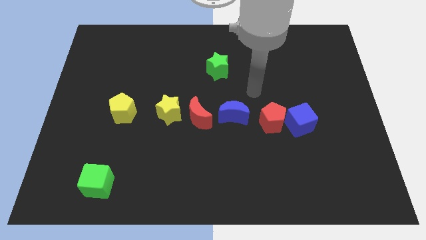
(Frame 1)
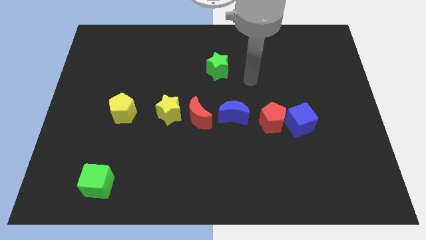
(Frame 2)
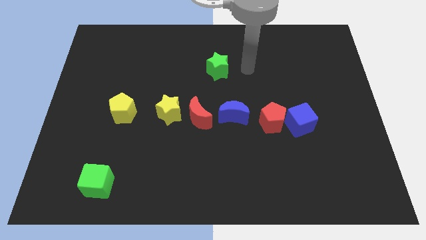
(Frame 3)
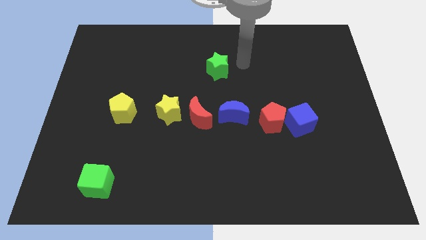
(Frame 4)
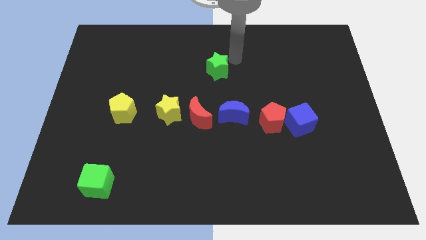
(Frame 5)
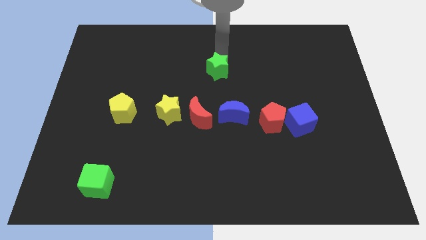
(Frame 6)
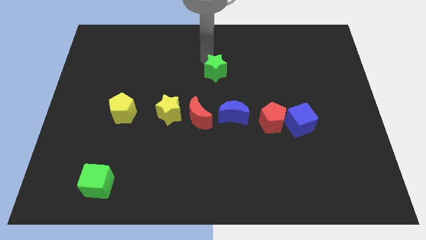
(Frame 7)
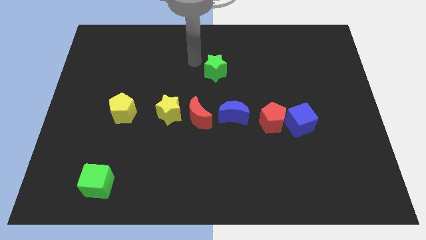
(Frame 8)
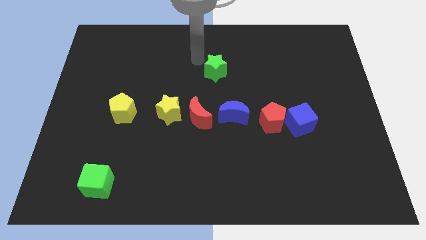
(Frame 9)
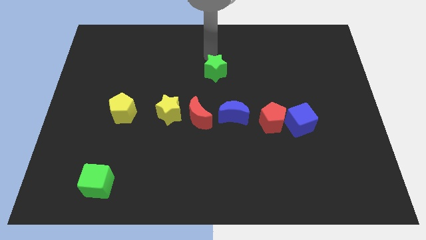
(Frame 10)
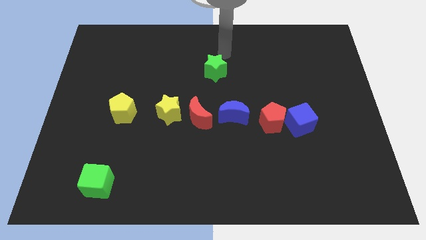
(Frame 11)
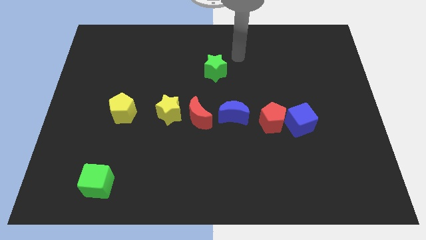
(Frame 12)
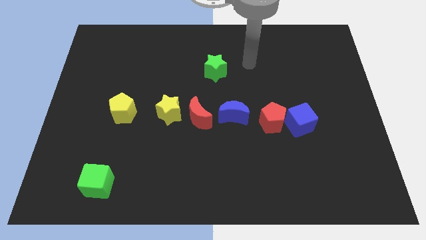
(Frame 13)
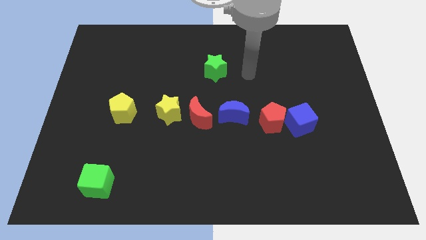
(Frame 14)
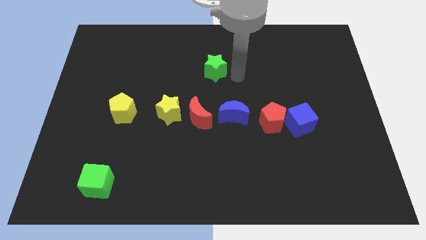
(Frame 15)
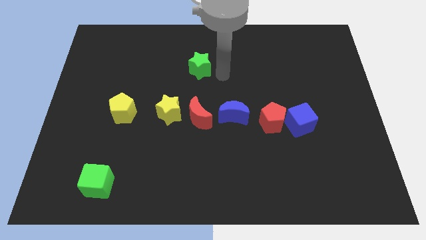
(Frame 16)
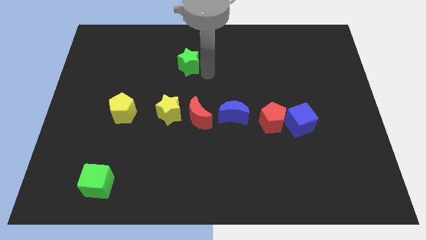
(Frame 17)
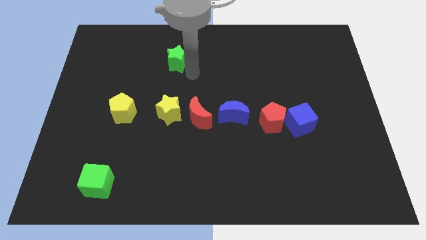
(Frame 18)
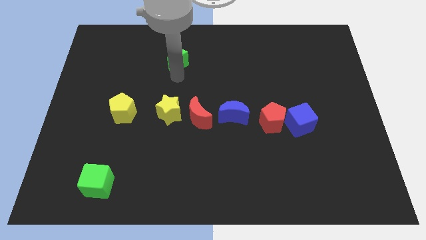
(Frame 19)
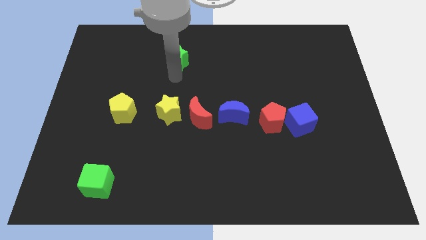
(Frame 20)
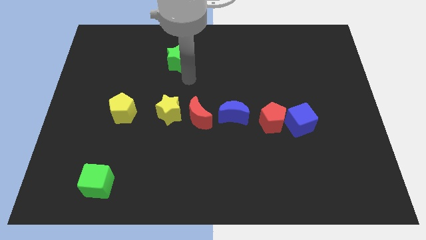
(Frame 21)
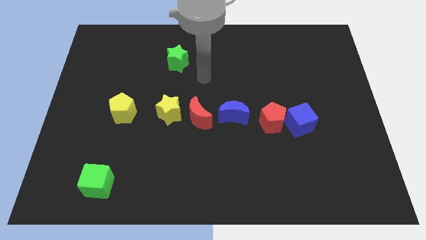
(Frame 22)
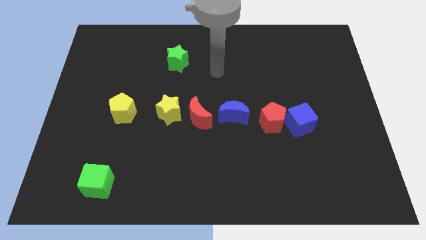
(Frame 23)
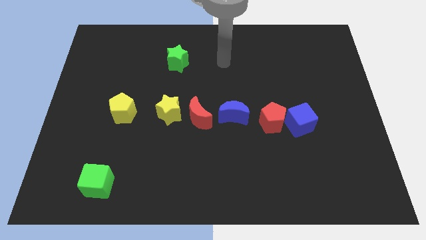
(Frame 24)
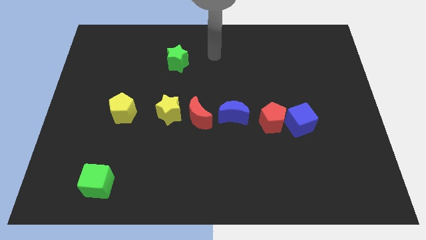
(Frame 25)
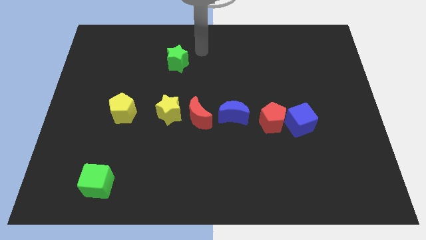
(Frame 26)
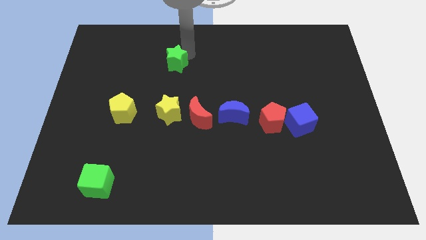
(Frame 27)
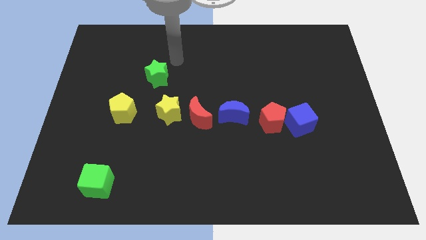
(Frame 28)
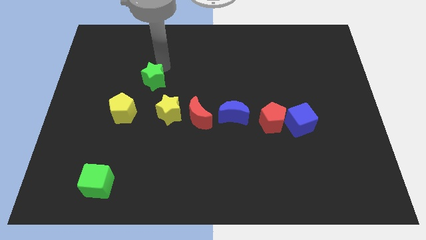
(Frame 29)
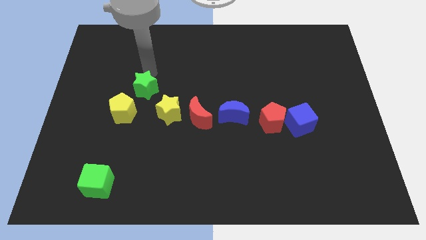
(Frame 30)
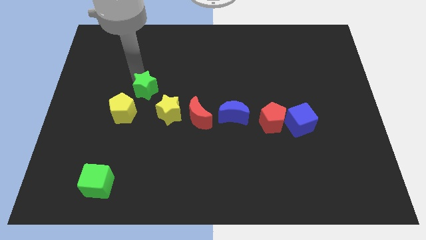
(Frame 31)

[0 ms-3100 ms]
push the green star slightly towards the yellow pentagon

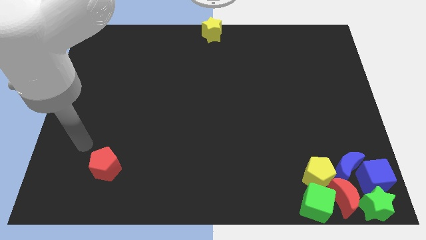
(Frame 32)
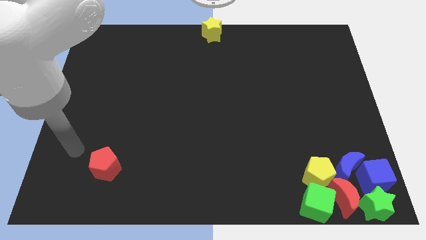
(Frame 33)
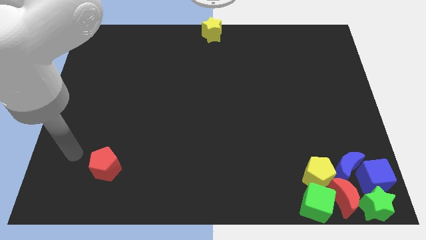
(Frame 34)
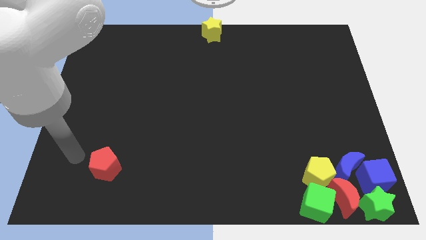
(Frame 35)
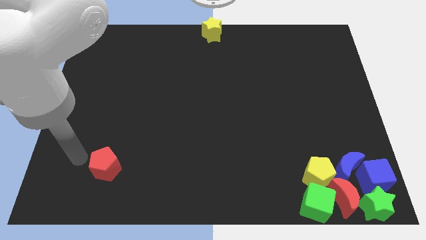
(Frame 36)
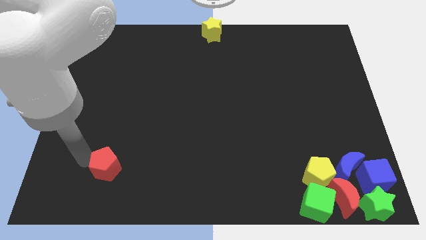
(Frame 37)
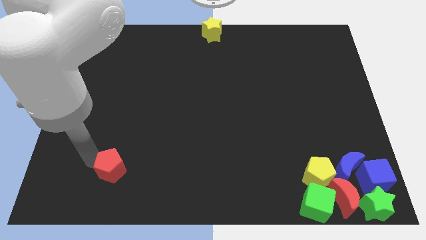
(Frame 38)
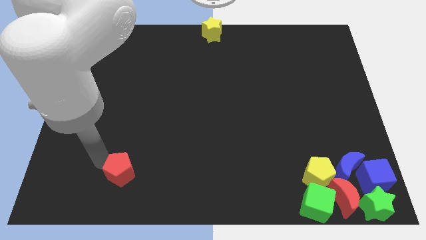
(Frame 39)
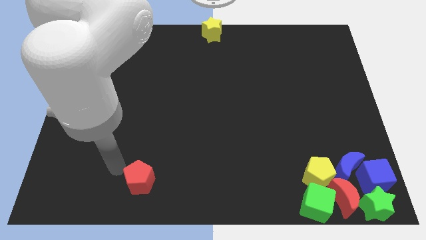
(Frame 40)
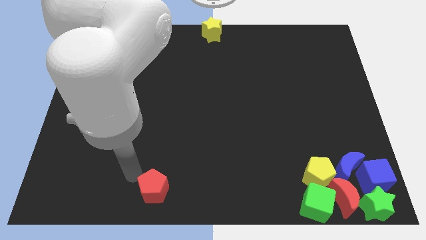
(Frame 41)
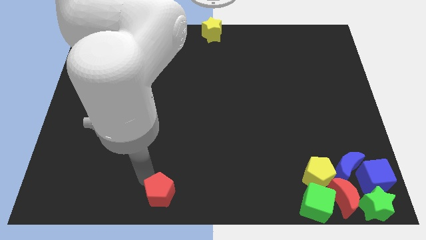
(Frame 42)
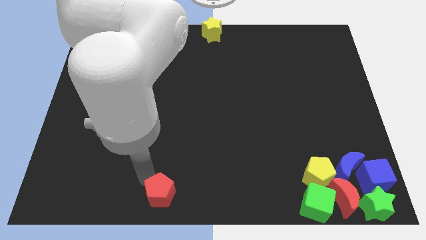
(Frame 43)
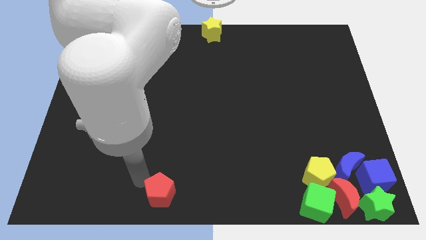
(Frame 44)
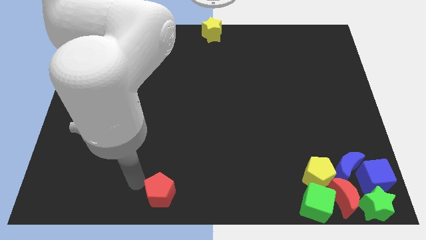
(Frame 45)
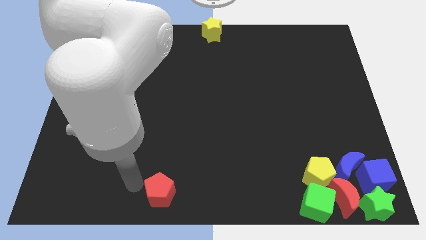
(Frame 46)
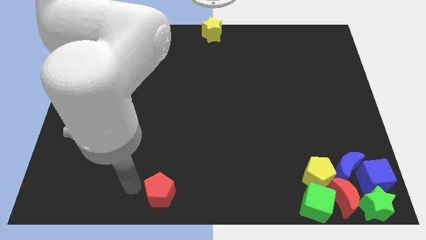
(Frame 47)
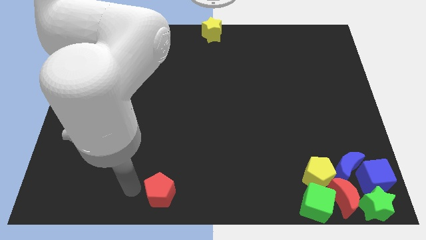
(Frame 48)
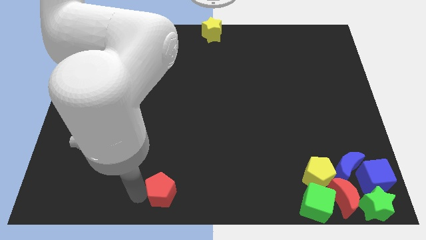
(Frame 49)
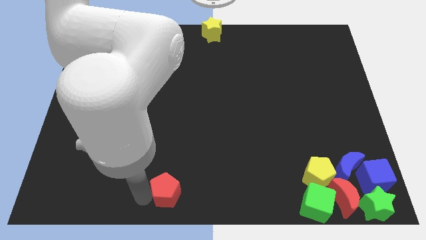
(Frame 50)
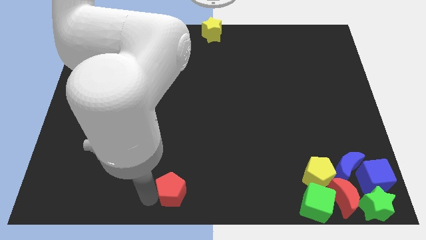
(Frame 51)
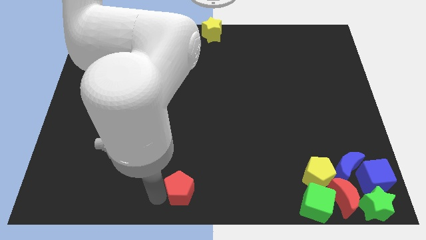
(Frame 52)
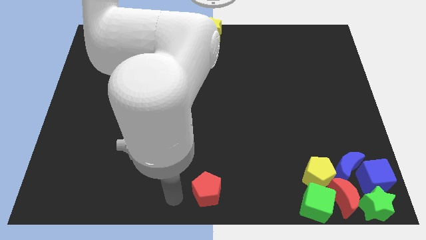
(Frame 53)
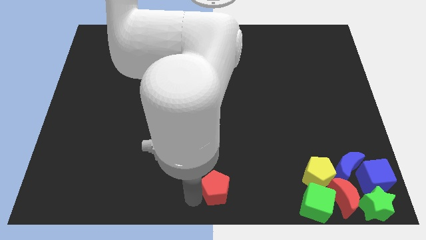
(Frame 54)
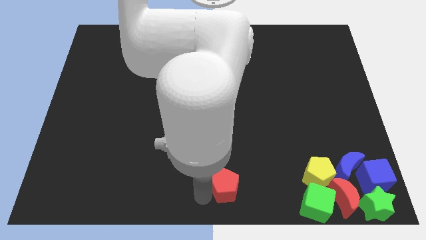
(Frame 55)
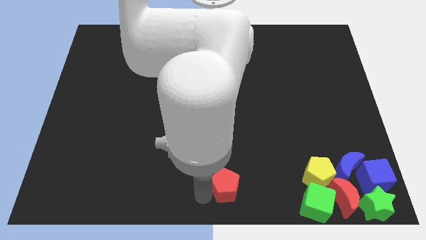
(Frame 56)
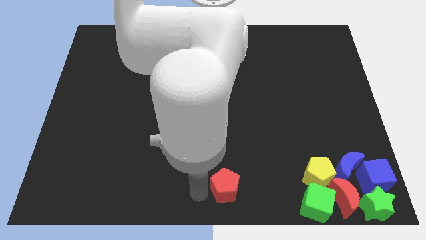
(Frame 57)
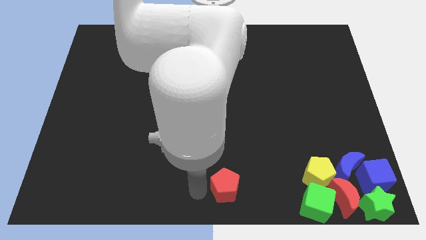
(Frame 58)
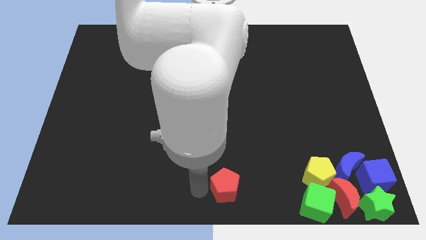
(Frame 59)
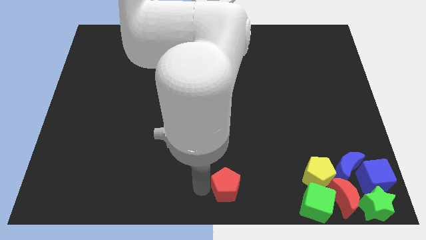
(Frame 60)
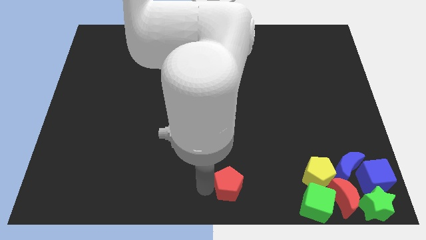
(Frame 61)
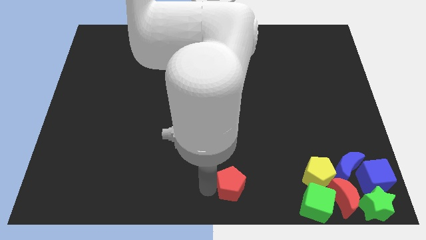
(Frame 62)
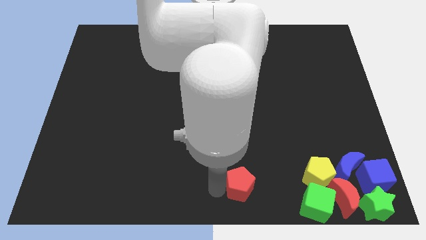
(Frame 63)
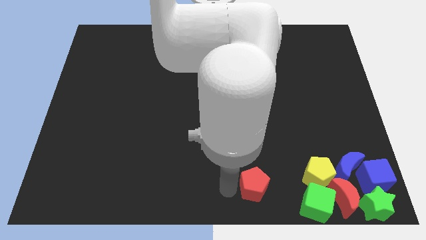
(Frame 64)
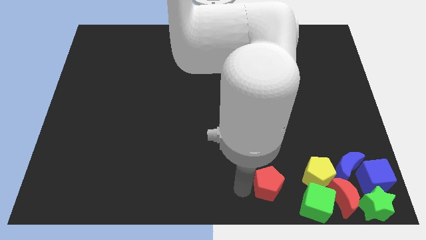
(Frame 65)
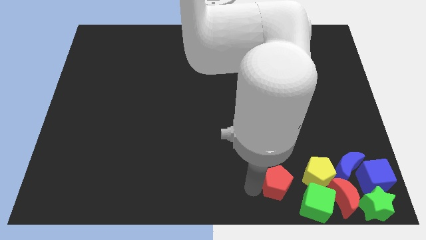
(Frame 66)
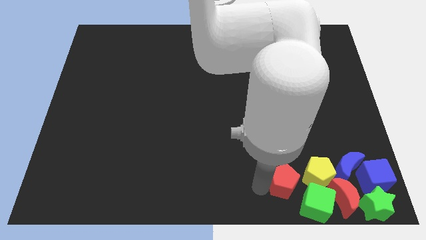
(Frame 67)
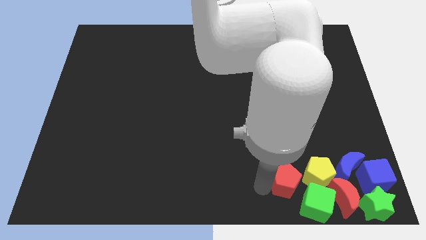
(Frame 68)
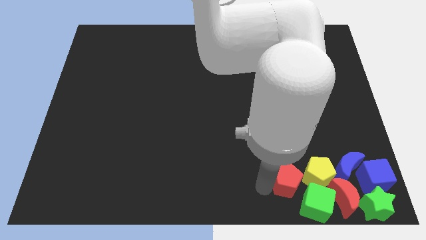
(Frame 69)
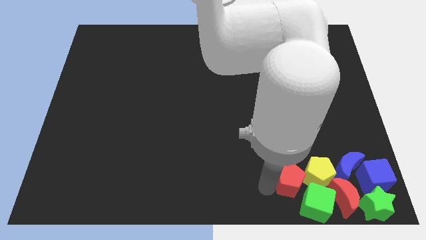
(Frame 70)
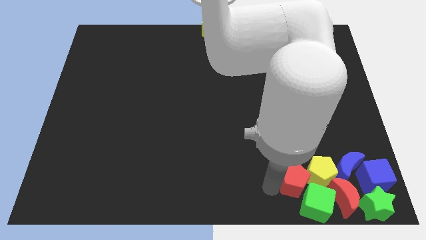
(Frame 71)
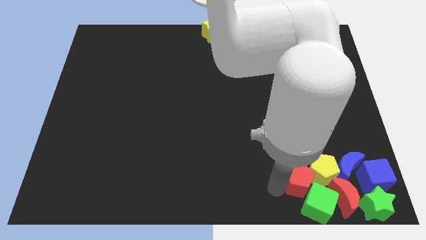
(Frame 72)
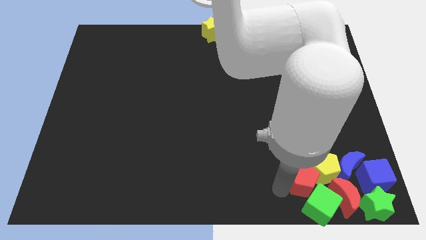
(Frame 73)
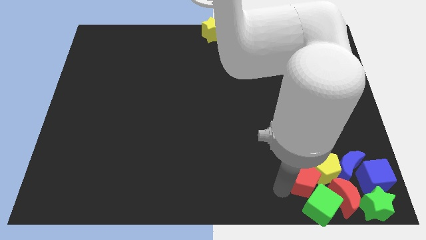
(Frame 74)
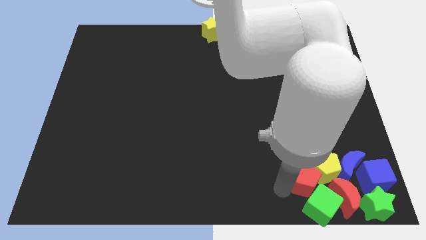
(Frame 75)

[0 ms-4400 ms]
move the red pentagon left beside the yellow pentagon and green cube

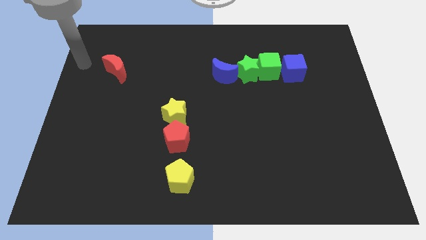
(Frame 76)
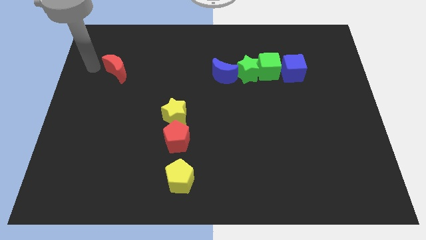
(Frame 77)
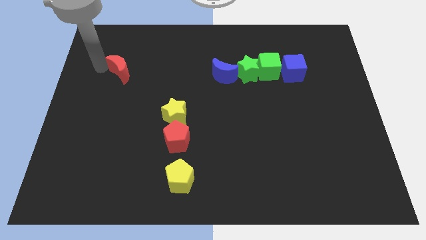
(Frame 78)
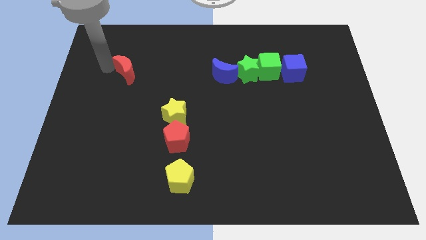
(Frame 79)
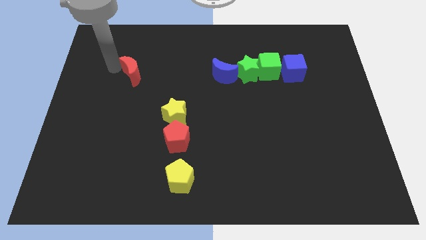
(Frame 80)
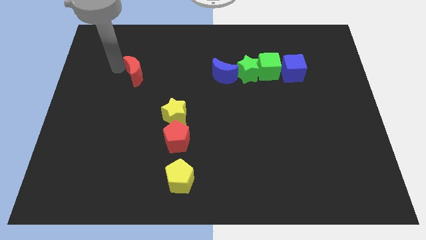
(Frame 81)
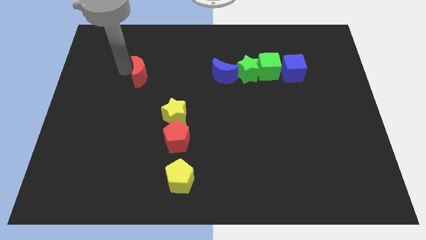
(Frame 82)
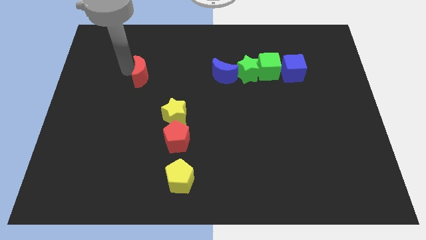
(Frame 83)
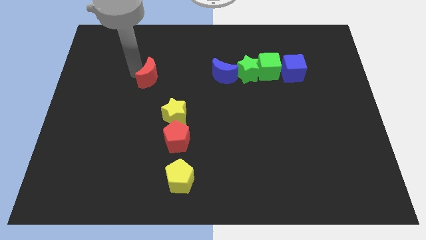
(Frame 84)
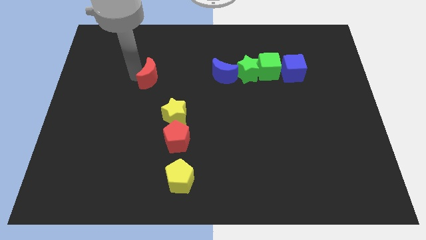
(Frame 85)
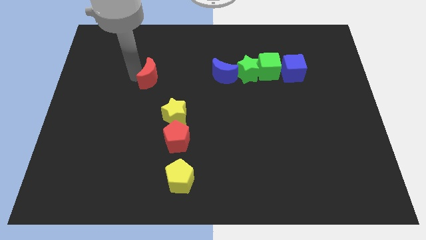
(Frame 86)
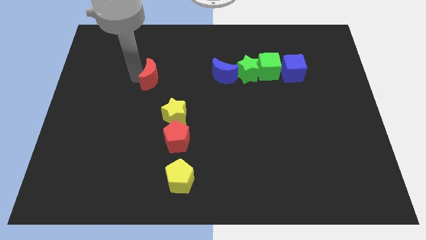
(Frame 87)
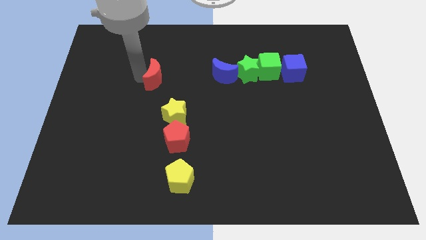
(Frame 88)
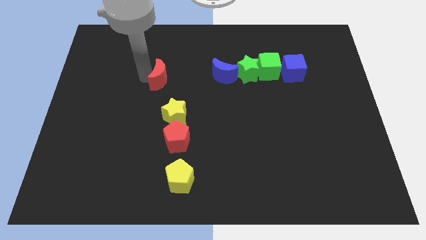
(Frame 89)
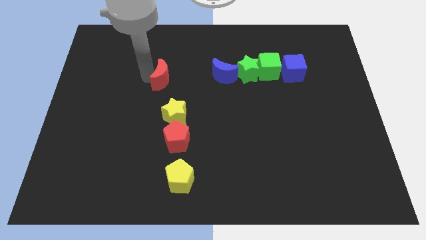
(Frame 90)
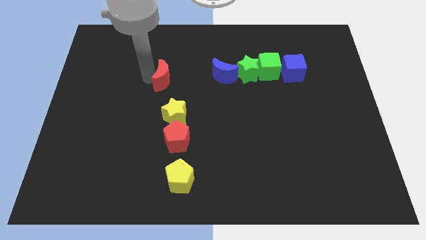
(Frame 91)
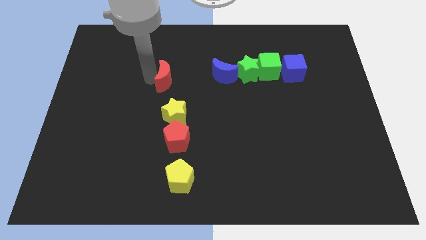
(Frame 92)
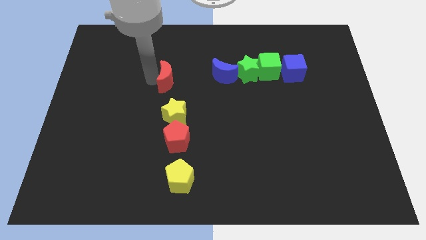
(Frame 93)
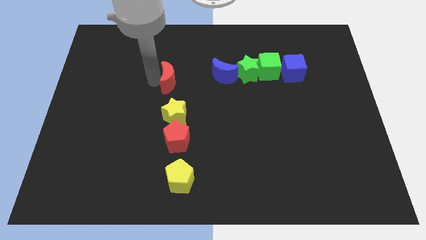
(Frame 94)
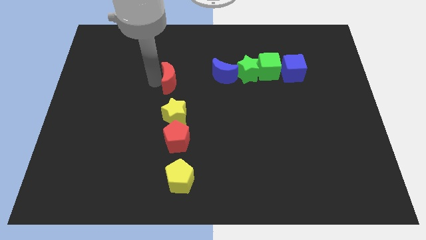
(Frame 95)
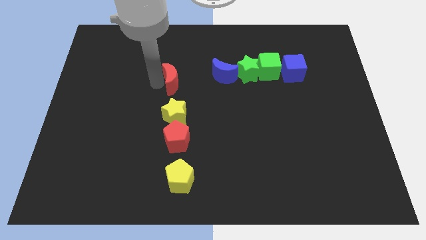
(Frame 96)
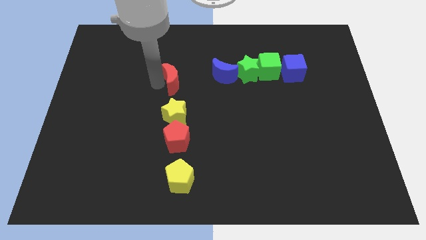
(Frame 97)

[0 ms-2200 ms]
move the red moon above to the yellow star
